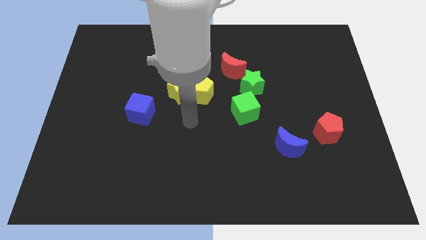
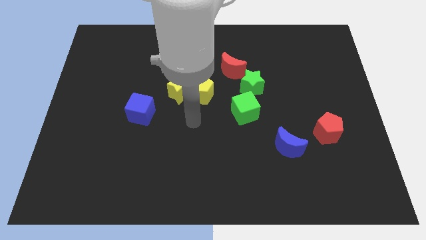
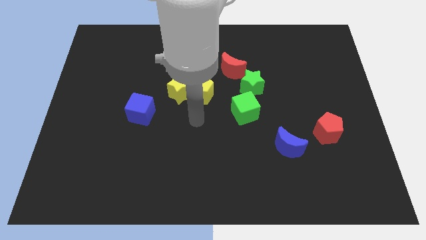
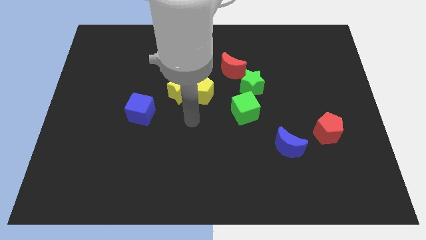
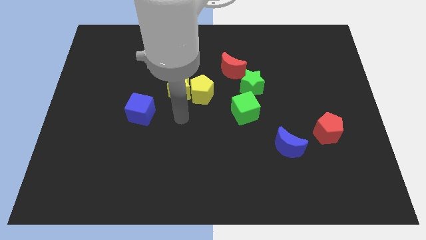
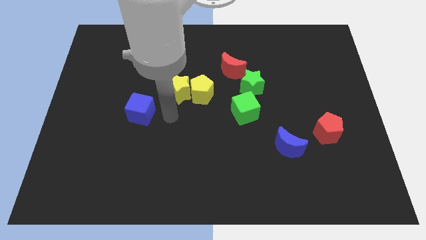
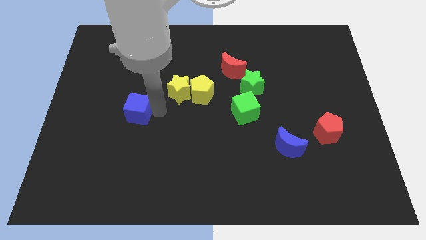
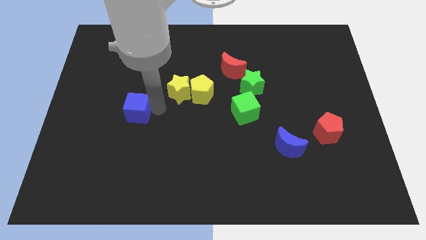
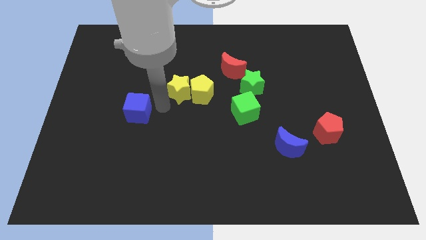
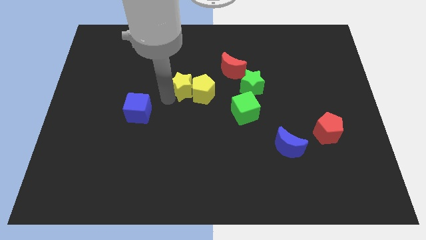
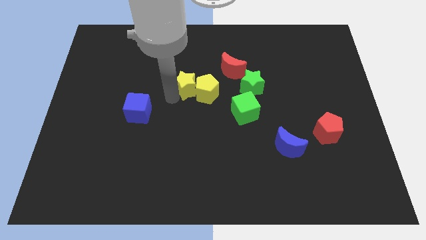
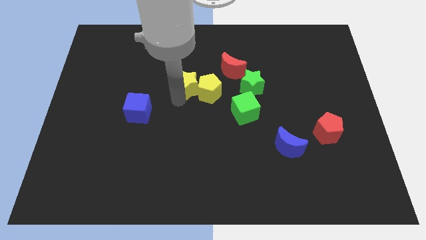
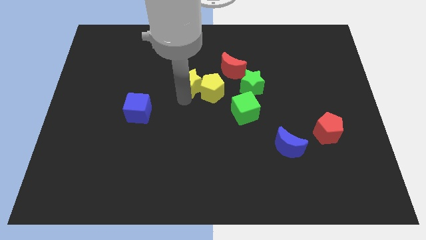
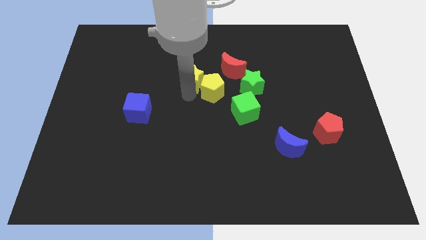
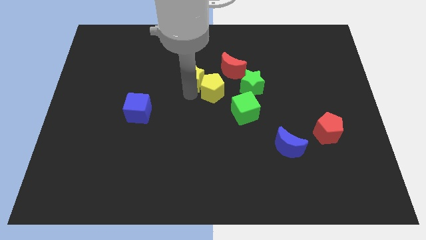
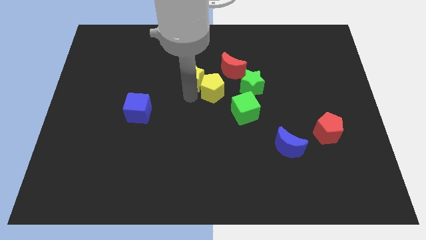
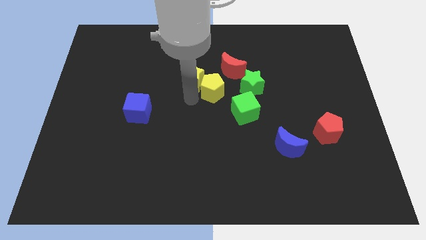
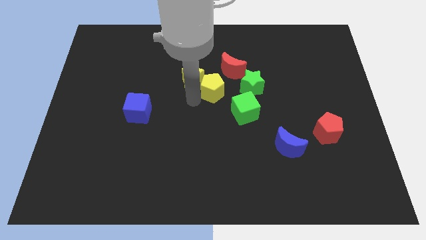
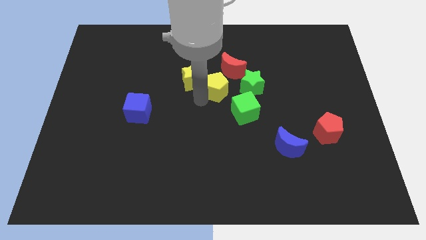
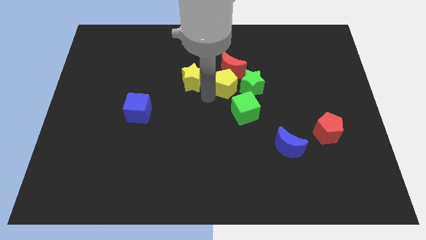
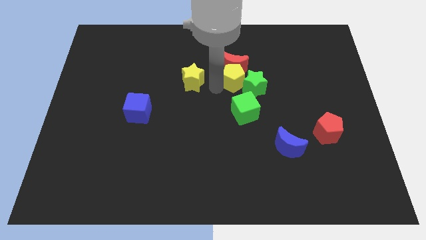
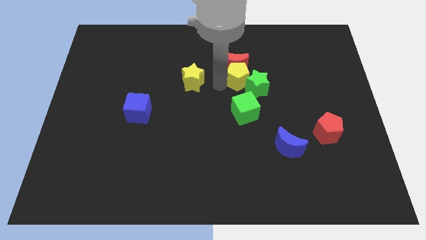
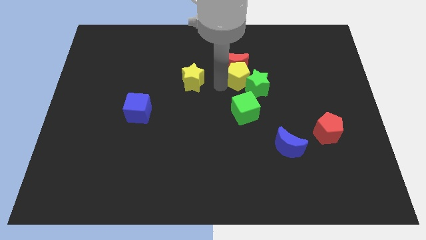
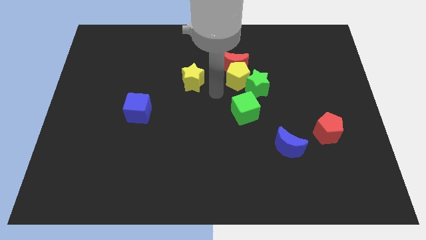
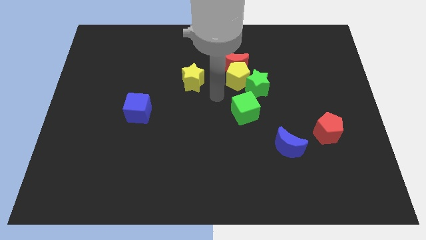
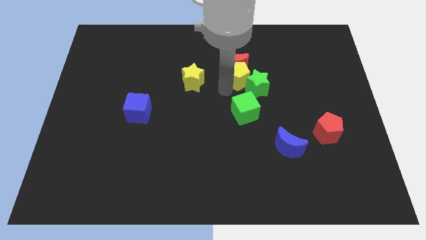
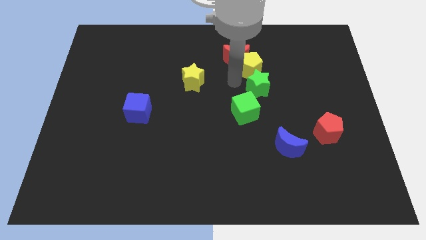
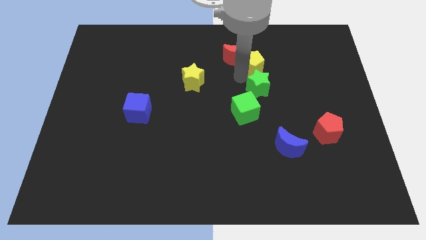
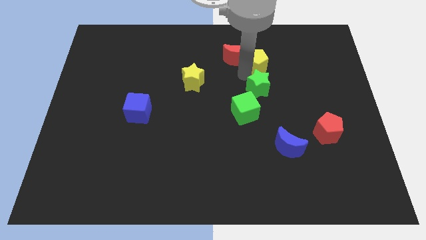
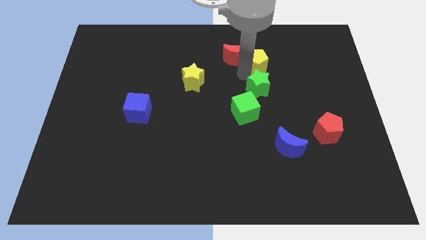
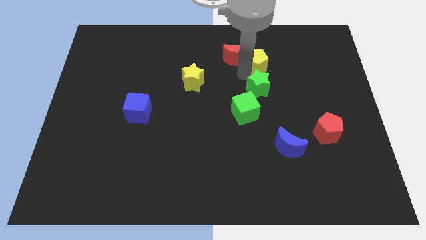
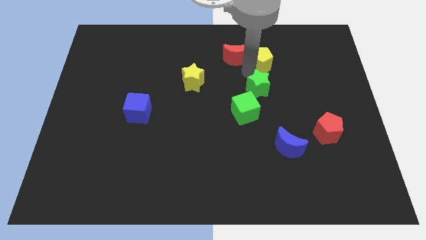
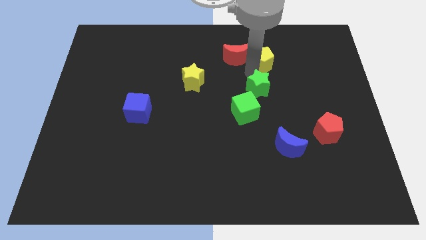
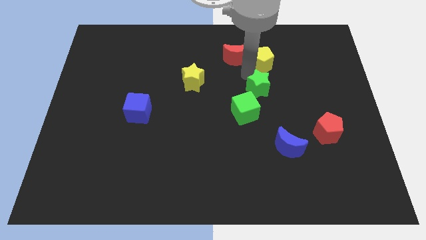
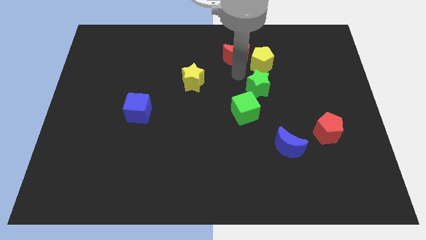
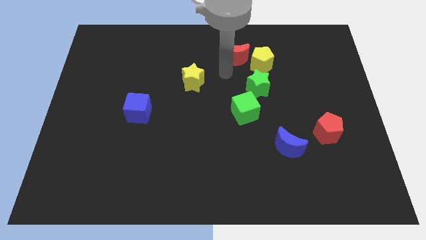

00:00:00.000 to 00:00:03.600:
separate the yellow pentagon from yellow star

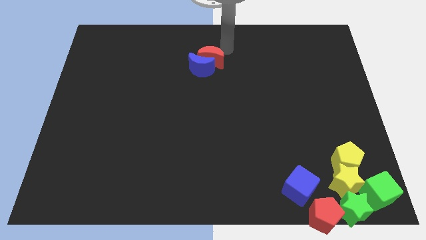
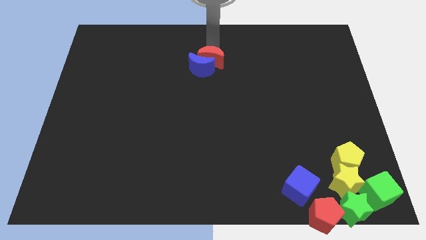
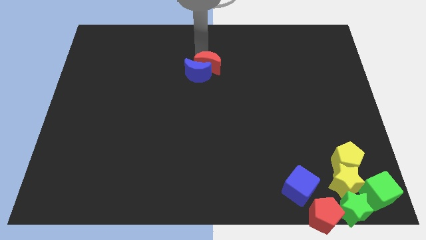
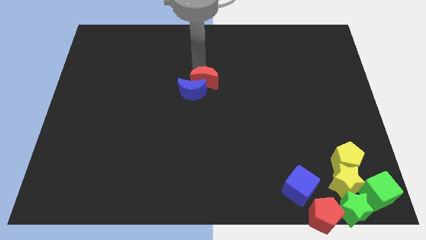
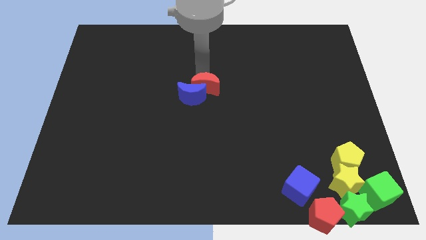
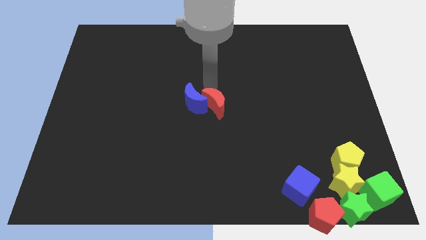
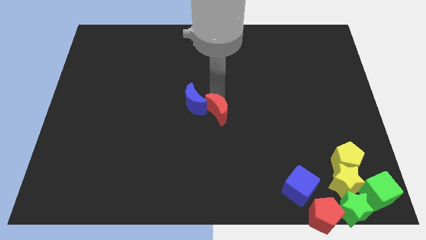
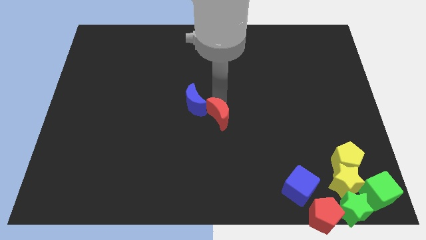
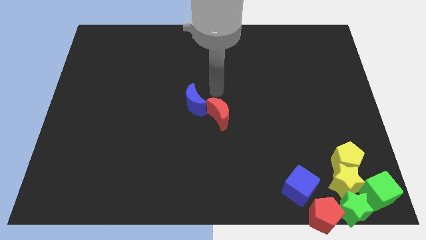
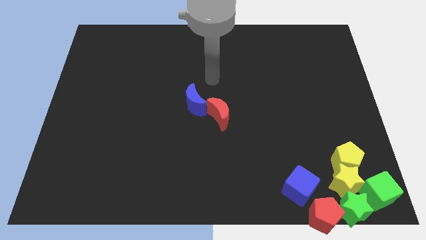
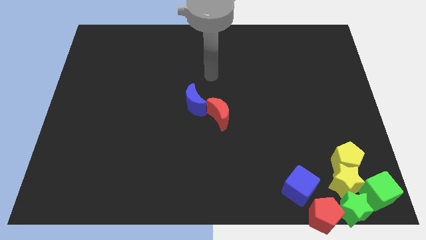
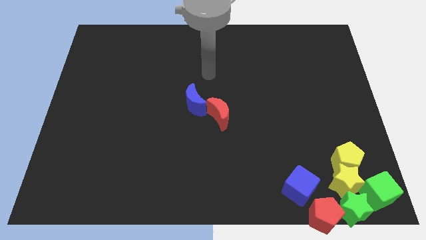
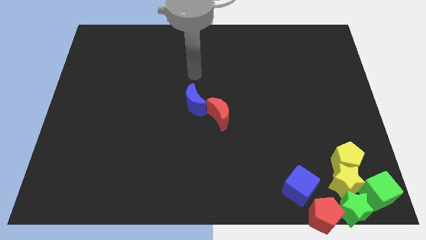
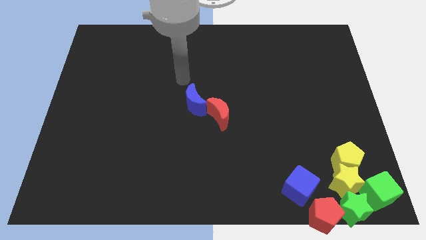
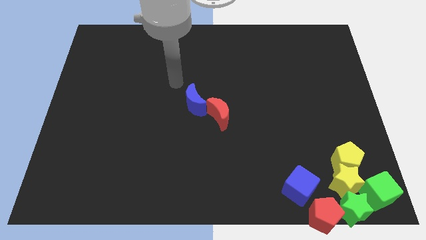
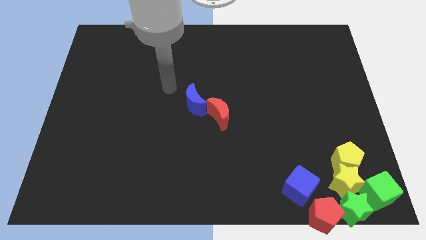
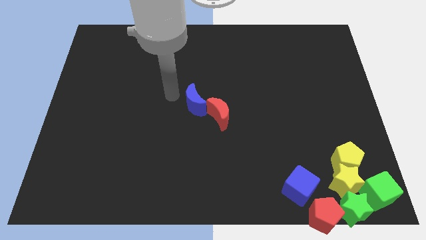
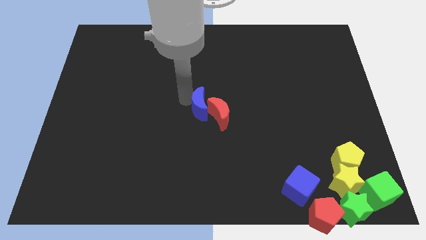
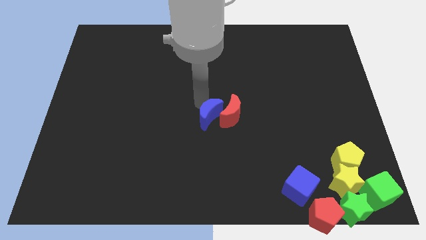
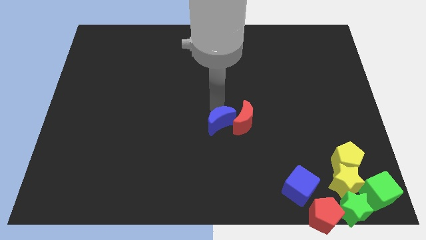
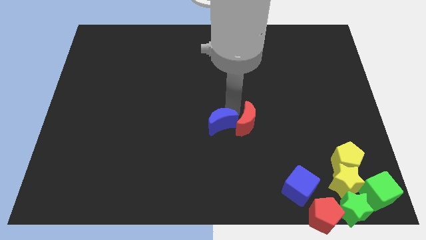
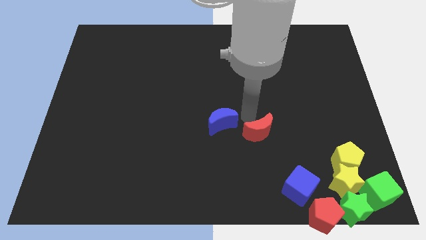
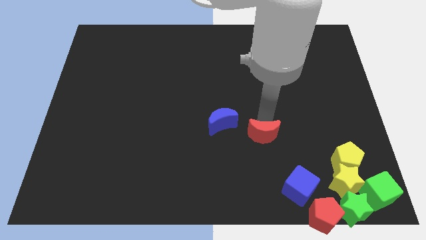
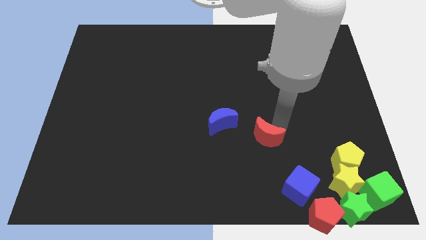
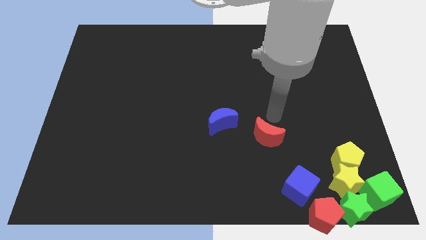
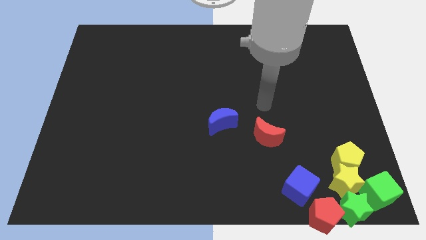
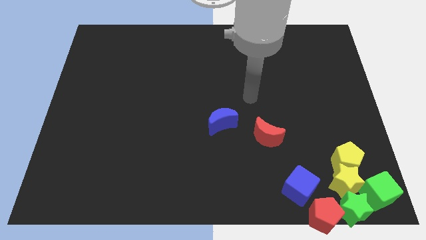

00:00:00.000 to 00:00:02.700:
separate the red crescent from the blue crescent

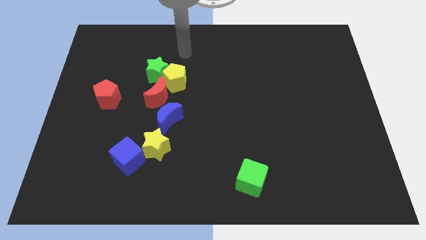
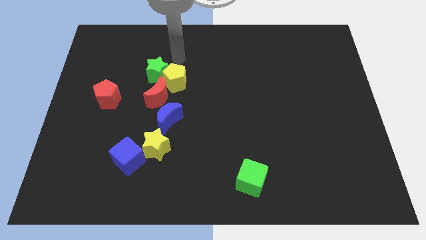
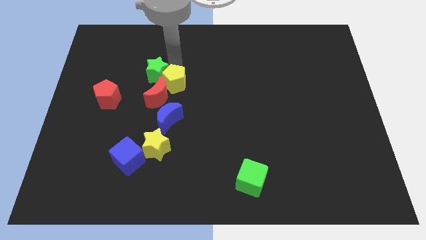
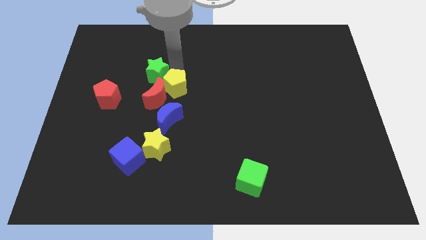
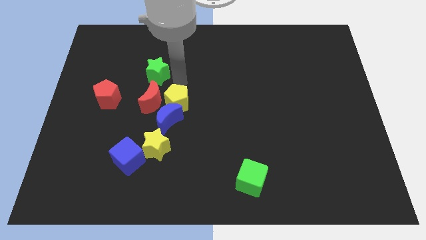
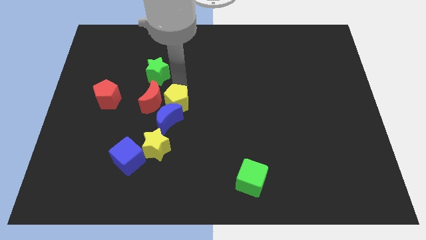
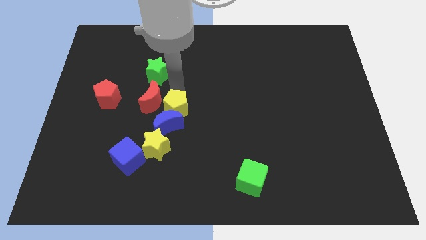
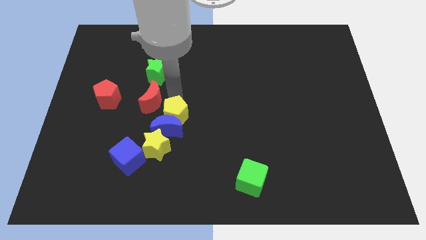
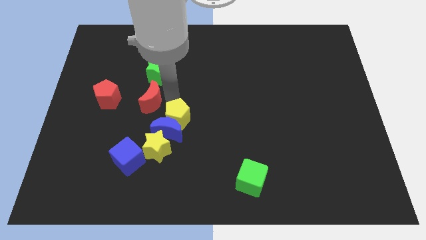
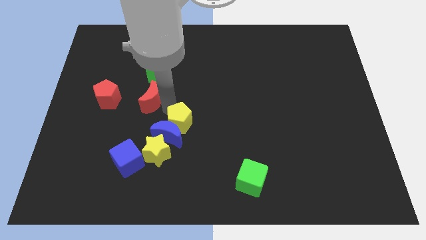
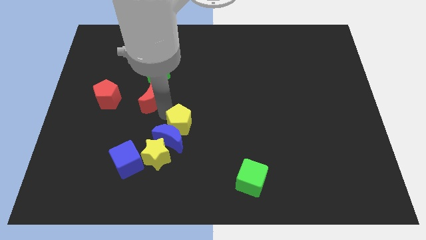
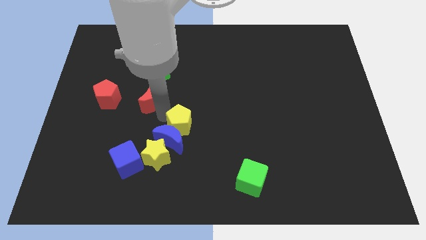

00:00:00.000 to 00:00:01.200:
move the yellow pentagon towards the blue crescent

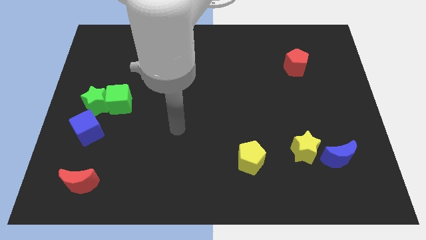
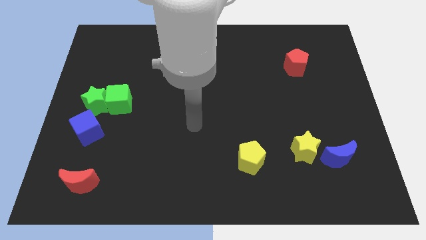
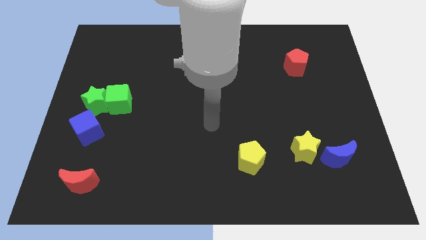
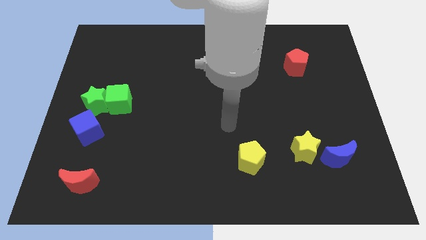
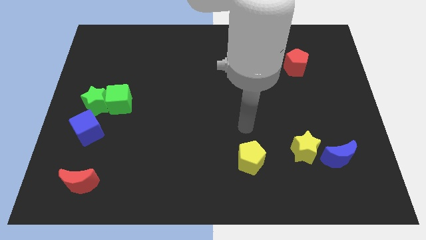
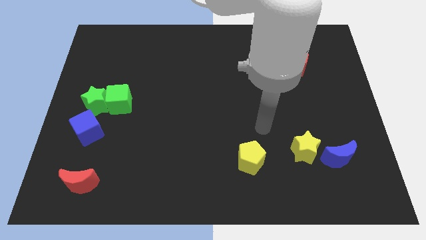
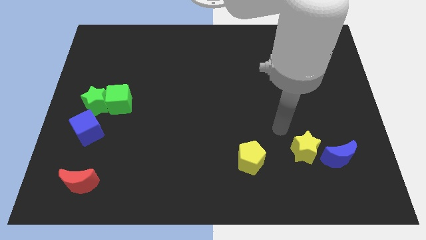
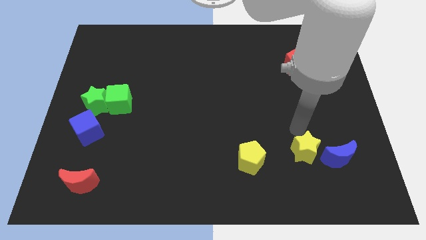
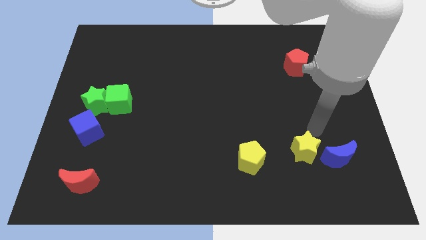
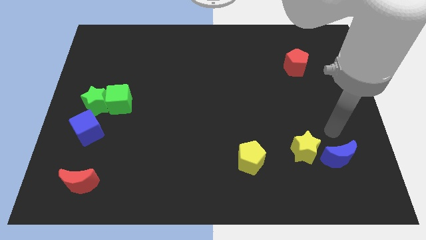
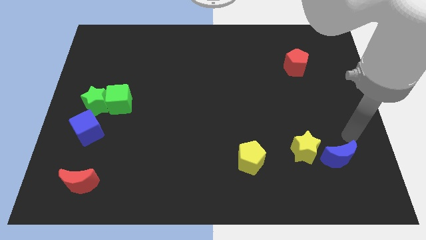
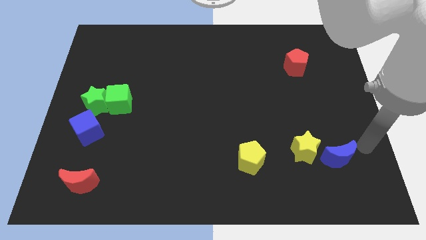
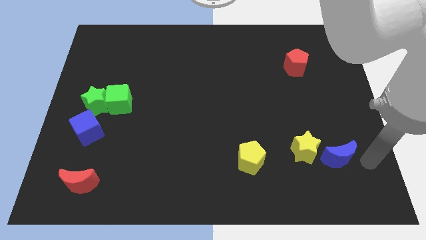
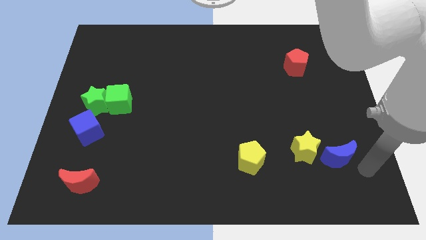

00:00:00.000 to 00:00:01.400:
point your hand at the bottom right side of the blue moon
